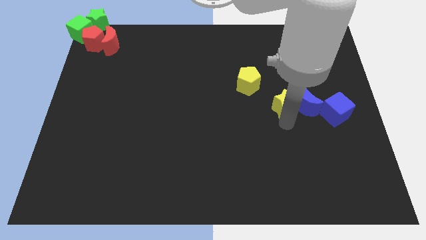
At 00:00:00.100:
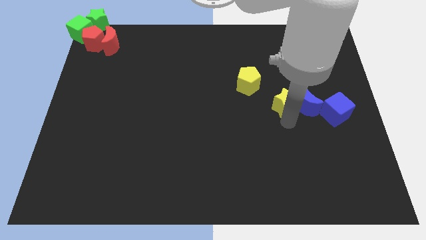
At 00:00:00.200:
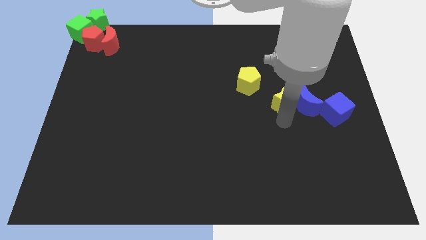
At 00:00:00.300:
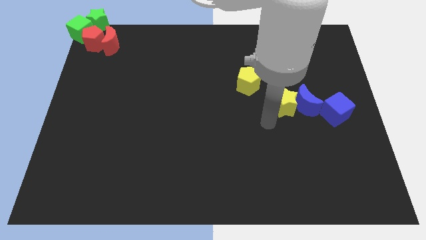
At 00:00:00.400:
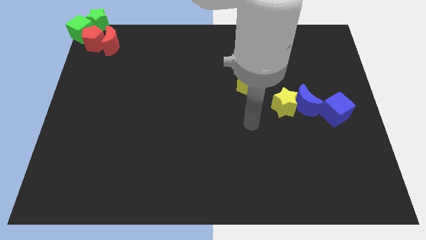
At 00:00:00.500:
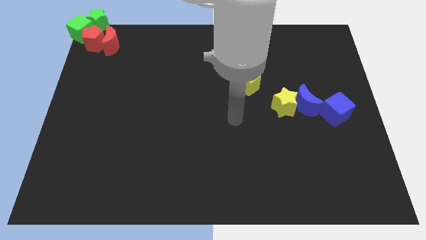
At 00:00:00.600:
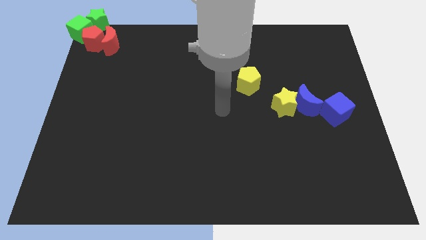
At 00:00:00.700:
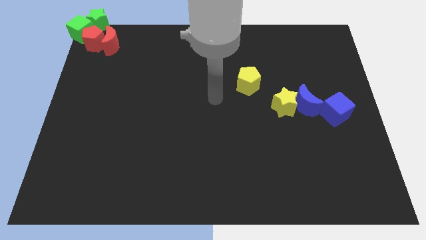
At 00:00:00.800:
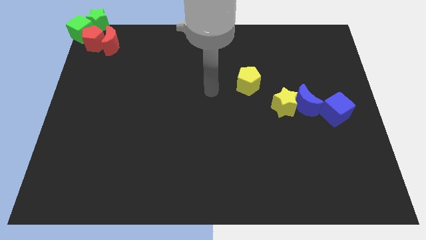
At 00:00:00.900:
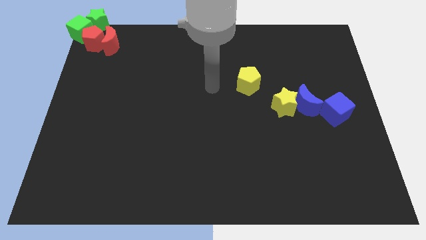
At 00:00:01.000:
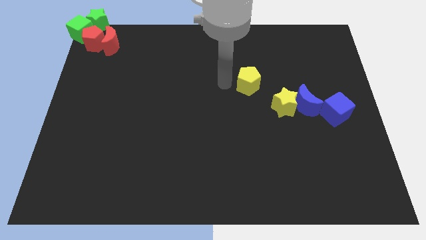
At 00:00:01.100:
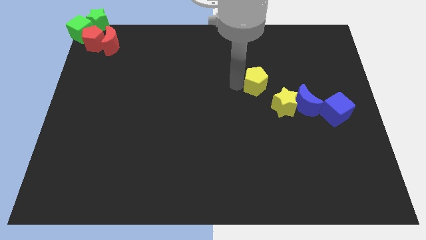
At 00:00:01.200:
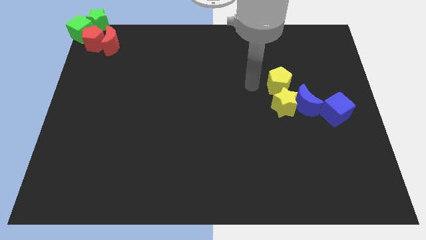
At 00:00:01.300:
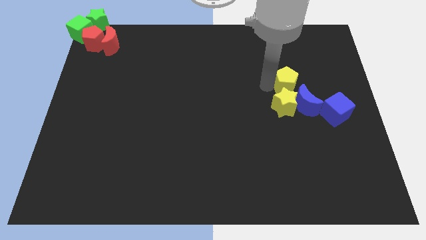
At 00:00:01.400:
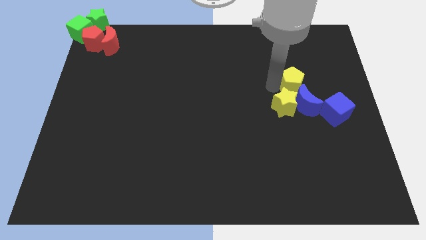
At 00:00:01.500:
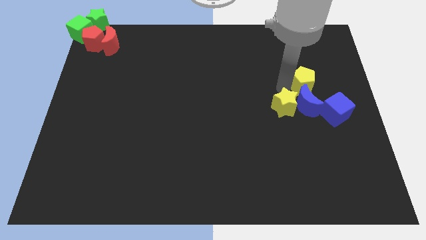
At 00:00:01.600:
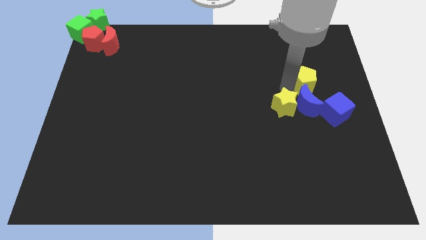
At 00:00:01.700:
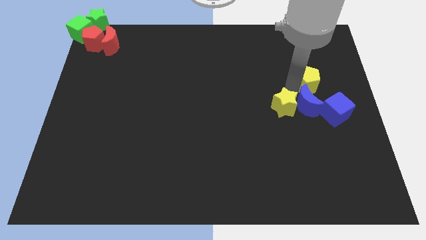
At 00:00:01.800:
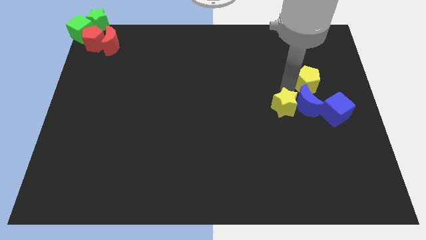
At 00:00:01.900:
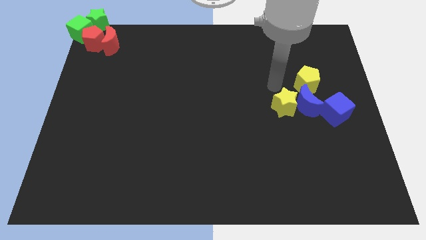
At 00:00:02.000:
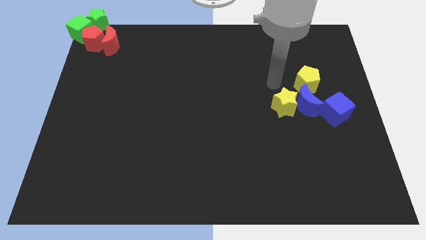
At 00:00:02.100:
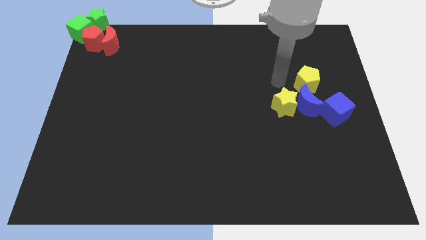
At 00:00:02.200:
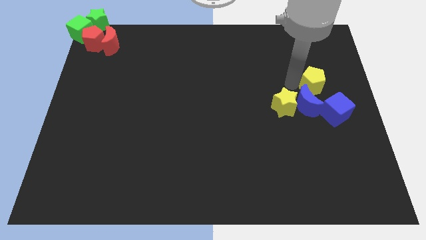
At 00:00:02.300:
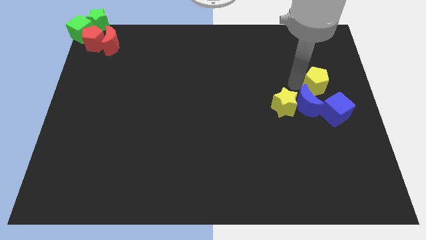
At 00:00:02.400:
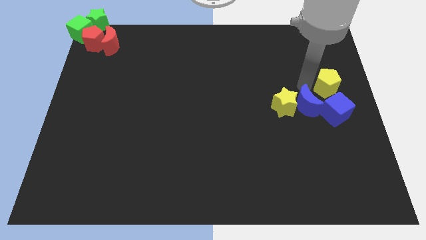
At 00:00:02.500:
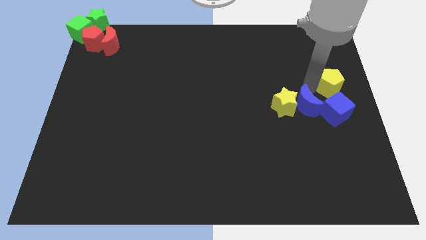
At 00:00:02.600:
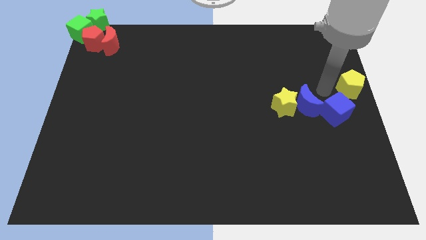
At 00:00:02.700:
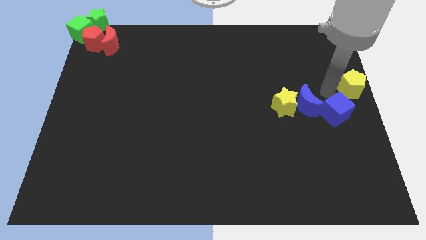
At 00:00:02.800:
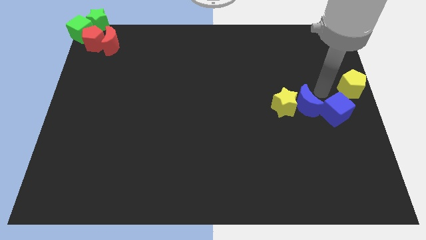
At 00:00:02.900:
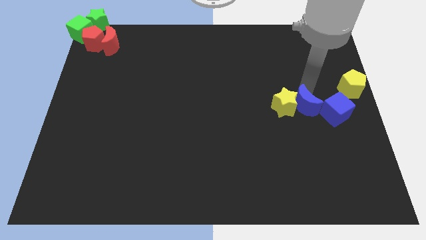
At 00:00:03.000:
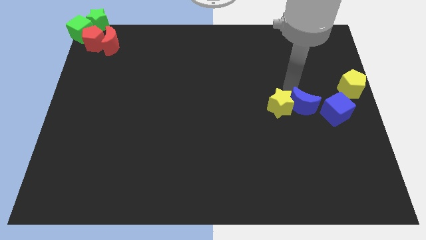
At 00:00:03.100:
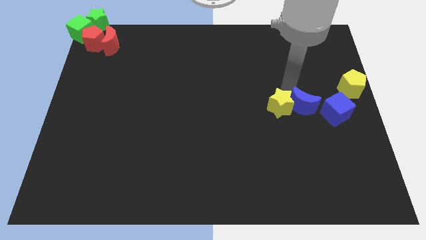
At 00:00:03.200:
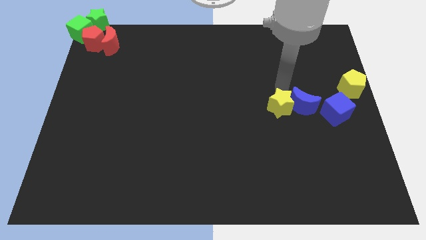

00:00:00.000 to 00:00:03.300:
push the yellow pentagon to the centre right of the board

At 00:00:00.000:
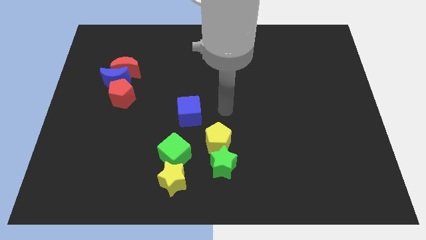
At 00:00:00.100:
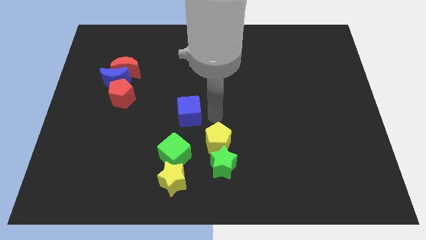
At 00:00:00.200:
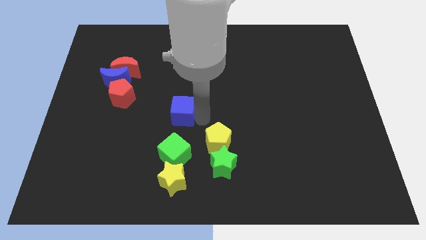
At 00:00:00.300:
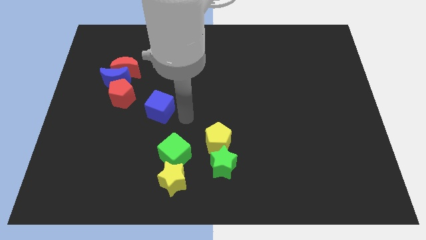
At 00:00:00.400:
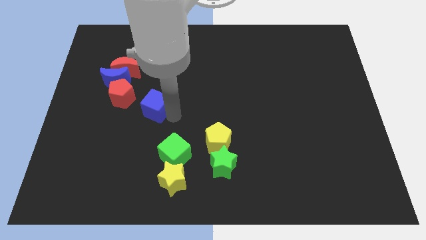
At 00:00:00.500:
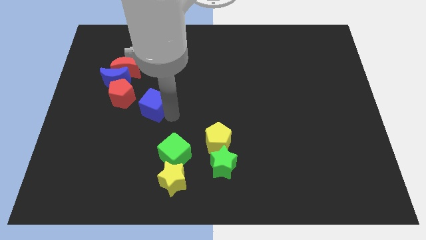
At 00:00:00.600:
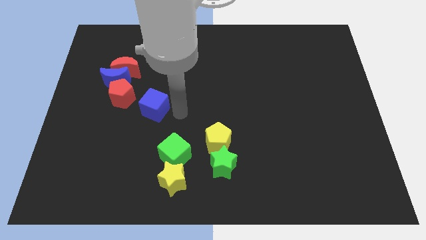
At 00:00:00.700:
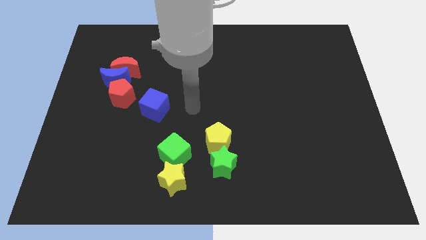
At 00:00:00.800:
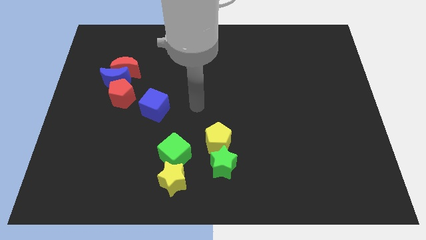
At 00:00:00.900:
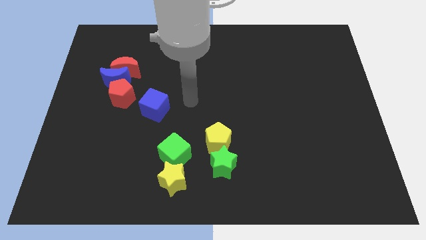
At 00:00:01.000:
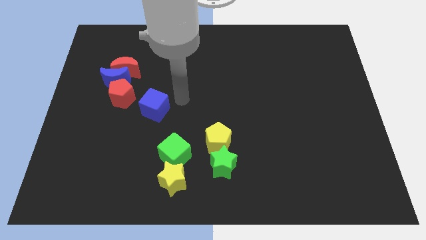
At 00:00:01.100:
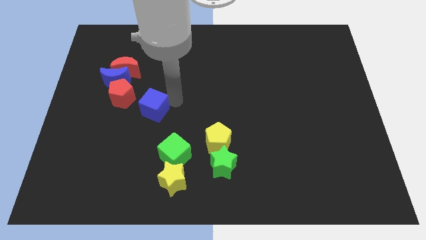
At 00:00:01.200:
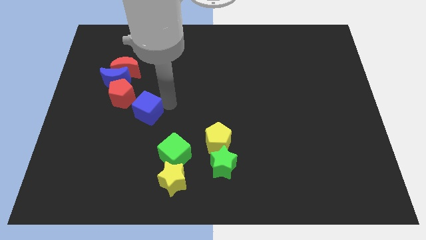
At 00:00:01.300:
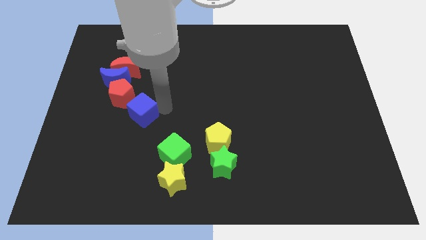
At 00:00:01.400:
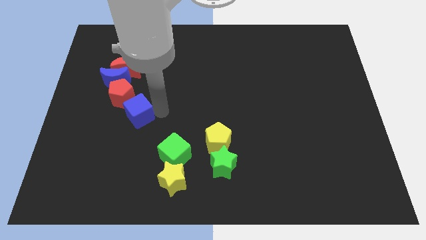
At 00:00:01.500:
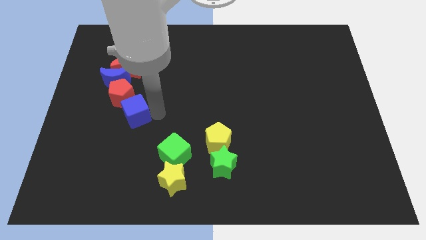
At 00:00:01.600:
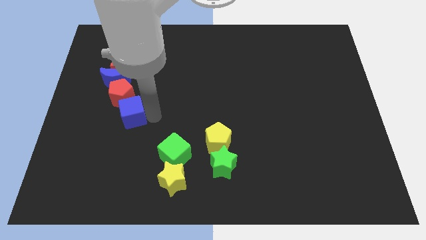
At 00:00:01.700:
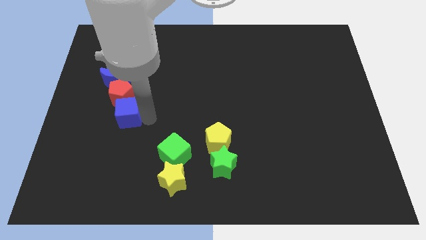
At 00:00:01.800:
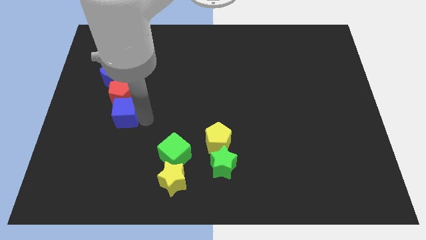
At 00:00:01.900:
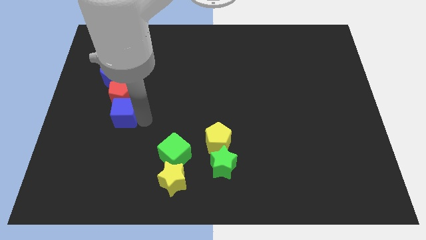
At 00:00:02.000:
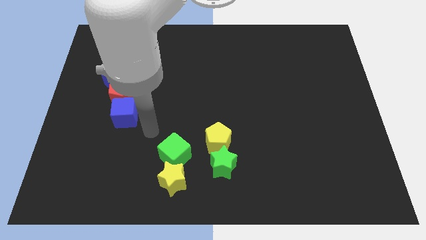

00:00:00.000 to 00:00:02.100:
push the blue cube to the bottom of red pentagon

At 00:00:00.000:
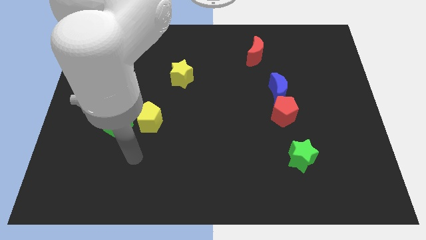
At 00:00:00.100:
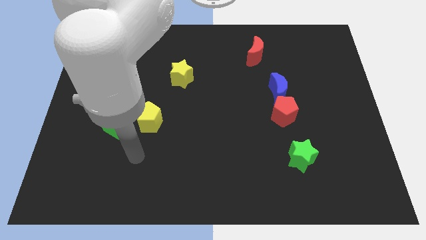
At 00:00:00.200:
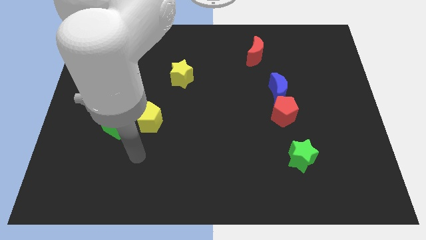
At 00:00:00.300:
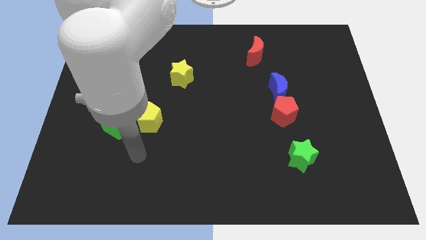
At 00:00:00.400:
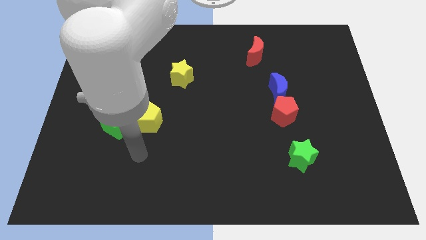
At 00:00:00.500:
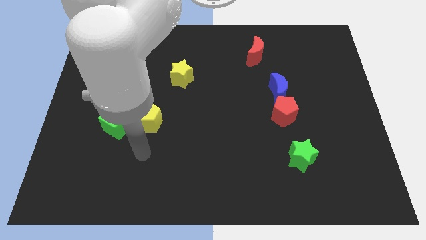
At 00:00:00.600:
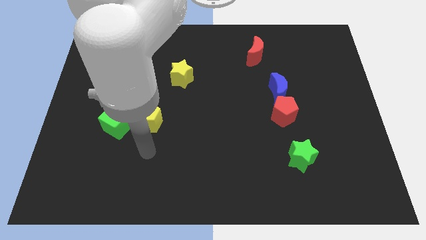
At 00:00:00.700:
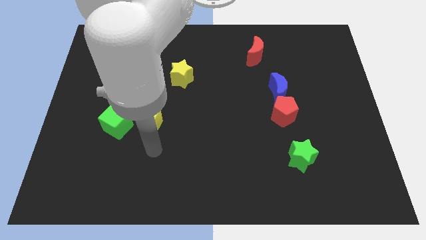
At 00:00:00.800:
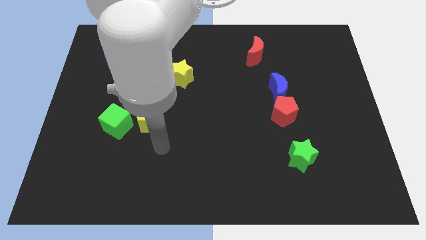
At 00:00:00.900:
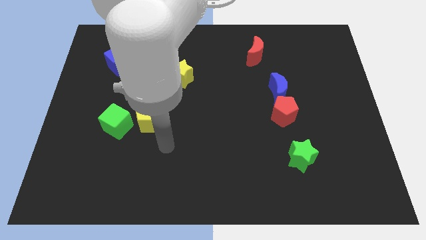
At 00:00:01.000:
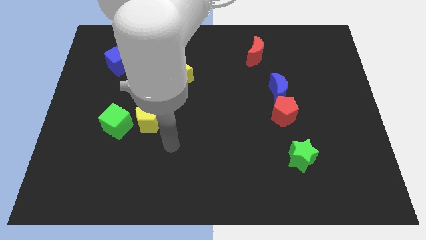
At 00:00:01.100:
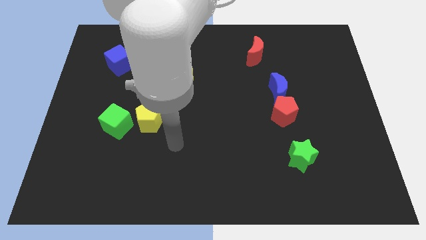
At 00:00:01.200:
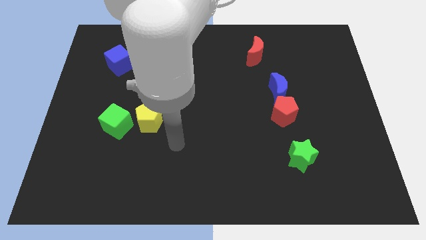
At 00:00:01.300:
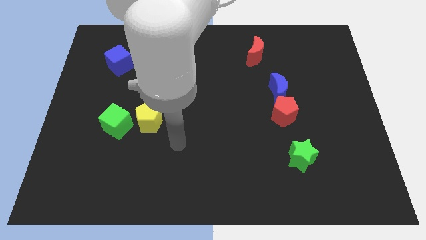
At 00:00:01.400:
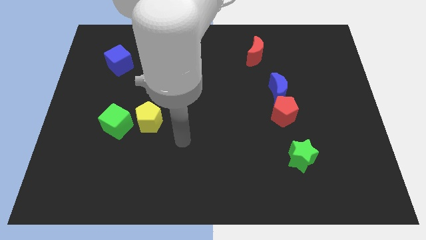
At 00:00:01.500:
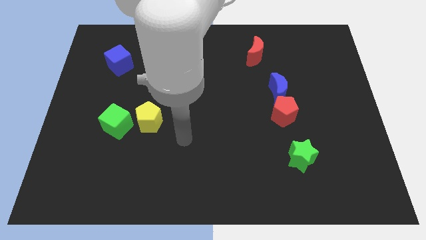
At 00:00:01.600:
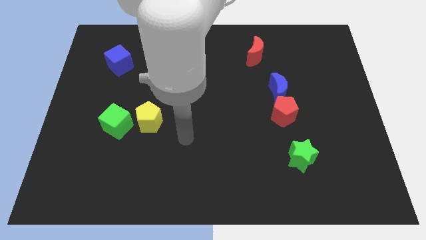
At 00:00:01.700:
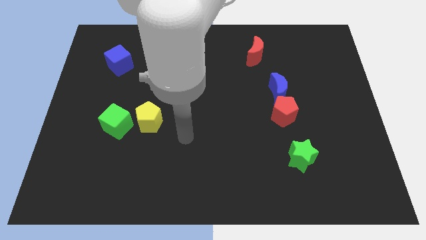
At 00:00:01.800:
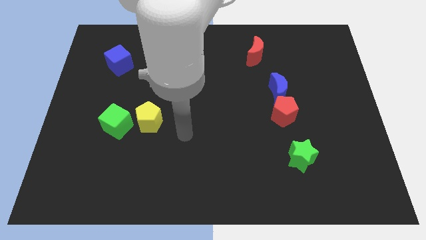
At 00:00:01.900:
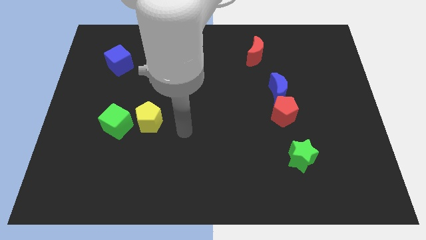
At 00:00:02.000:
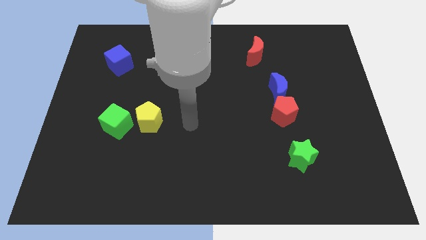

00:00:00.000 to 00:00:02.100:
slide your arm to the right of yellow pentagon

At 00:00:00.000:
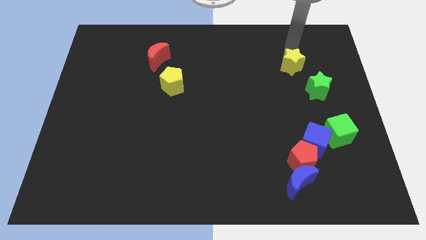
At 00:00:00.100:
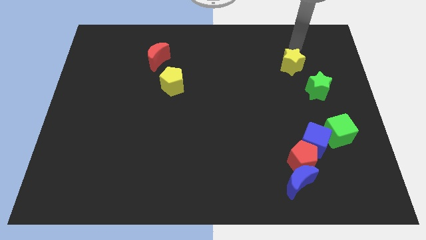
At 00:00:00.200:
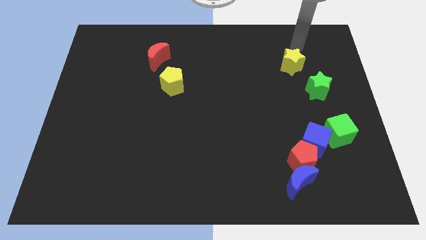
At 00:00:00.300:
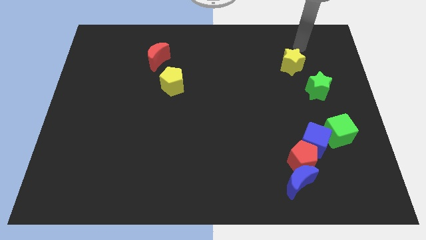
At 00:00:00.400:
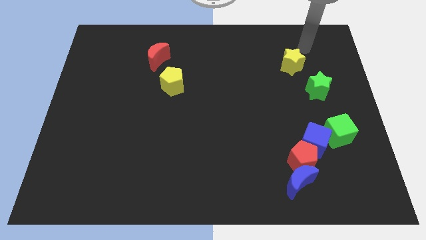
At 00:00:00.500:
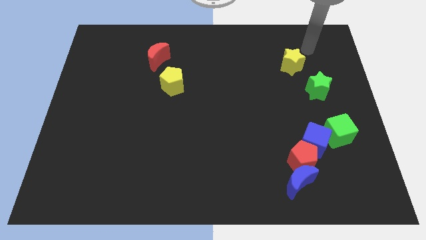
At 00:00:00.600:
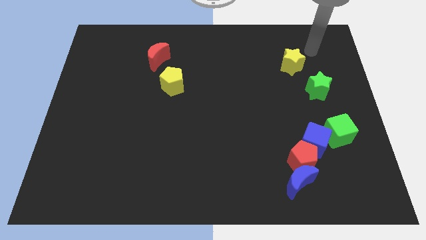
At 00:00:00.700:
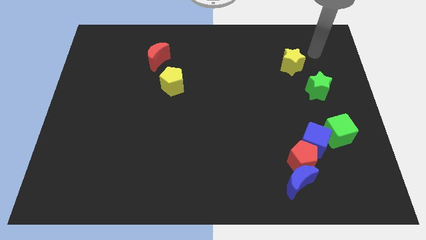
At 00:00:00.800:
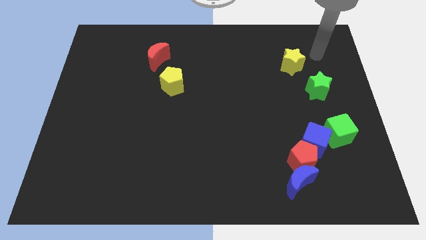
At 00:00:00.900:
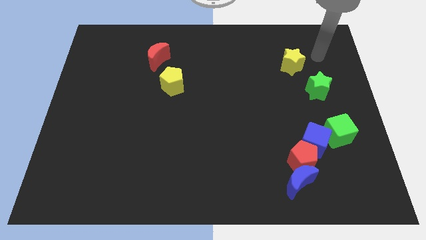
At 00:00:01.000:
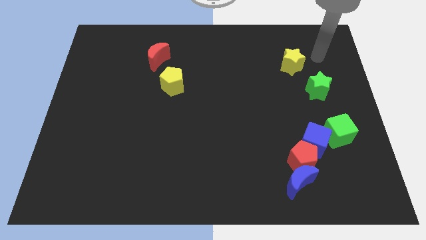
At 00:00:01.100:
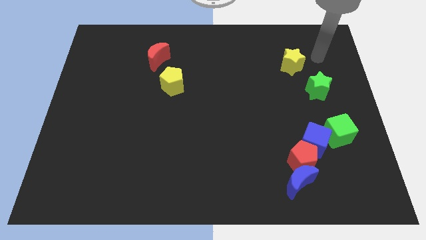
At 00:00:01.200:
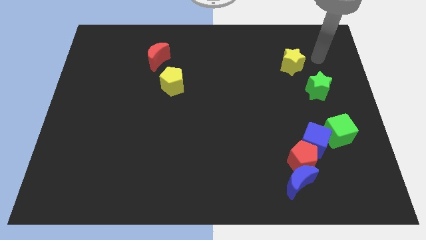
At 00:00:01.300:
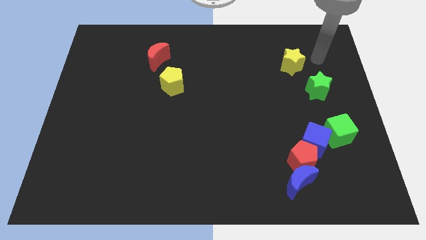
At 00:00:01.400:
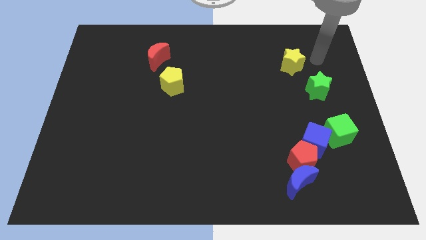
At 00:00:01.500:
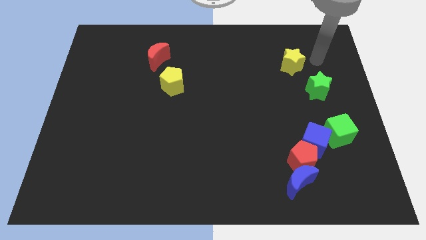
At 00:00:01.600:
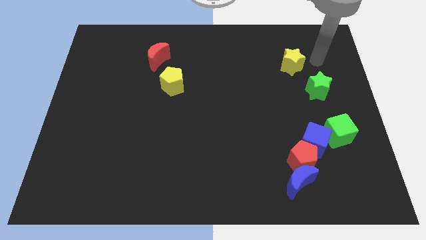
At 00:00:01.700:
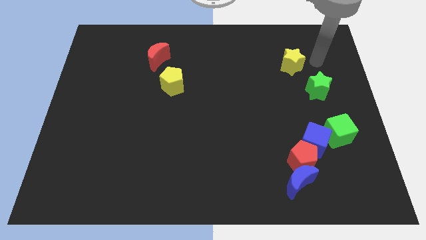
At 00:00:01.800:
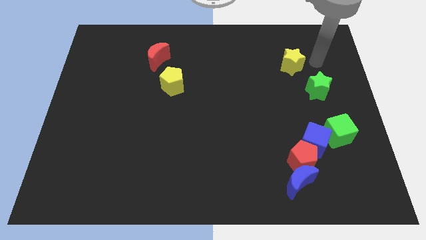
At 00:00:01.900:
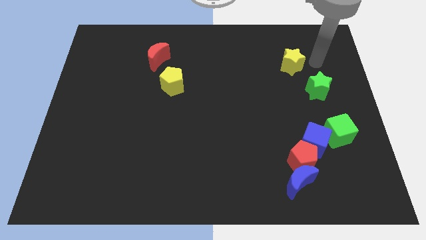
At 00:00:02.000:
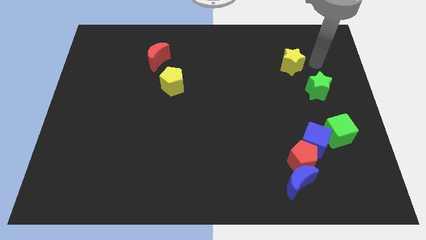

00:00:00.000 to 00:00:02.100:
point your arm at the top of green star
